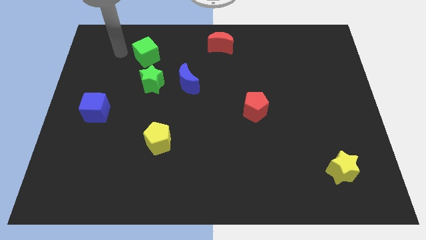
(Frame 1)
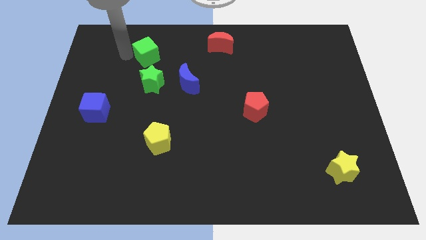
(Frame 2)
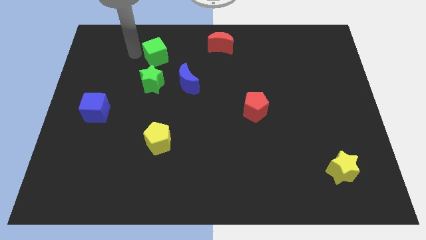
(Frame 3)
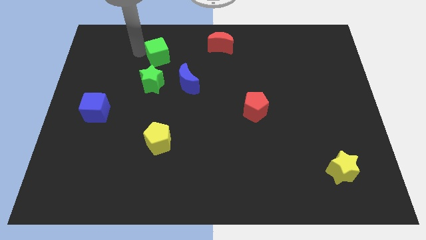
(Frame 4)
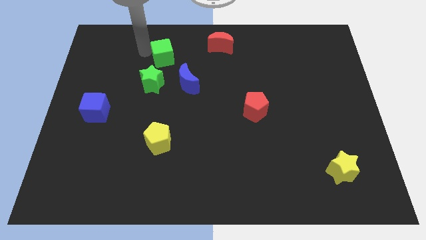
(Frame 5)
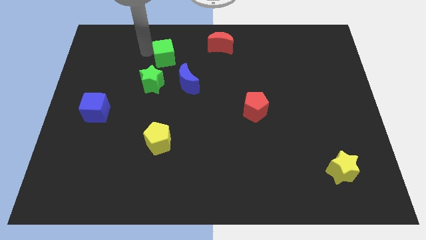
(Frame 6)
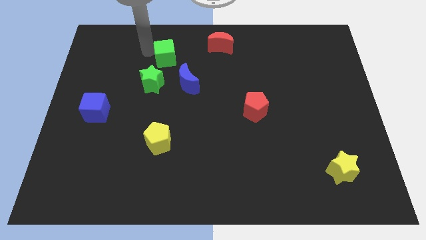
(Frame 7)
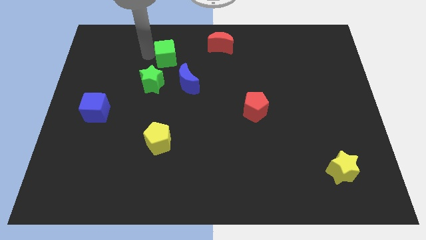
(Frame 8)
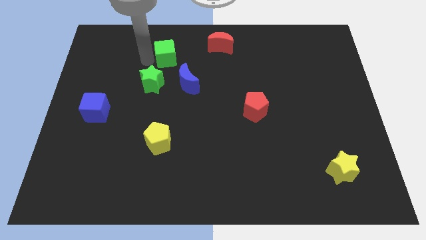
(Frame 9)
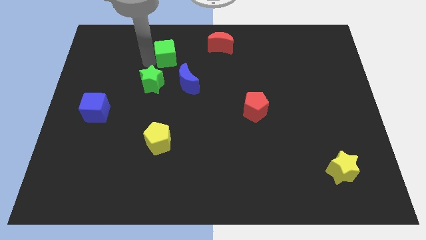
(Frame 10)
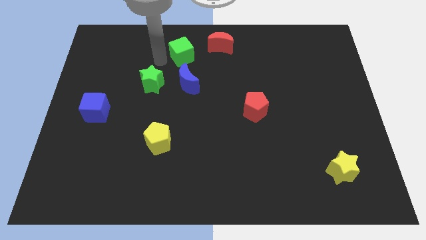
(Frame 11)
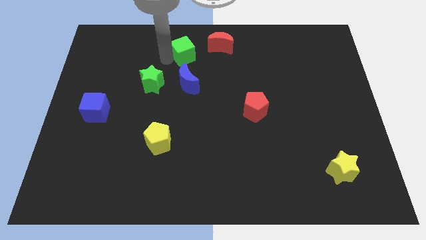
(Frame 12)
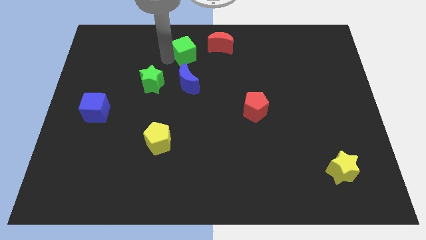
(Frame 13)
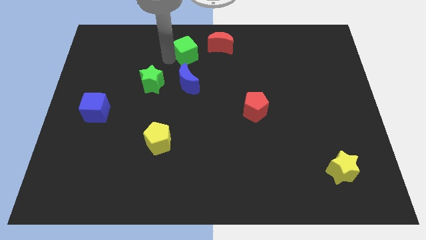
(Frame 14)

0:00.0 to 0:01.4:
push the green cube to the top of blue crescent

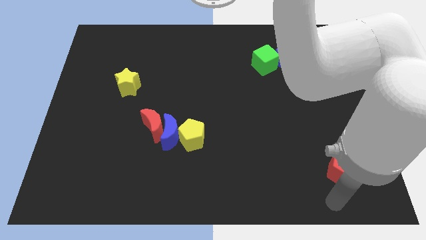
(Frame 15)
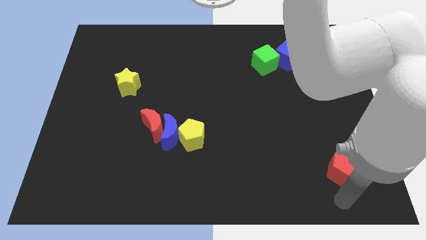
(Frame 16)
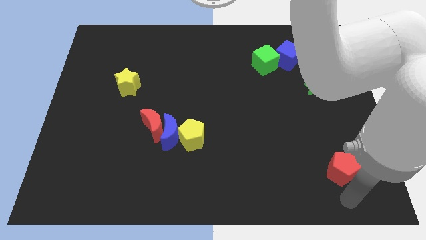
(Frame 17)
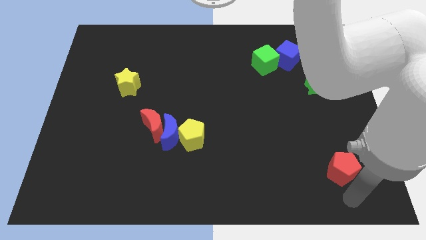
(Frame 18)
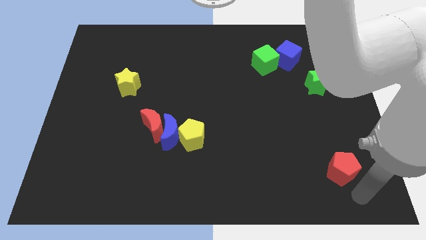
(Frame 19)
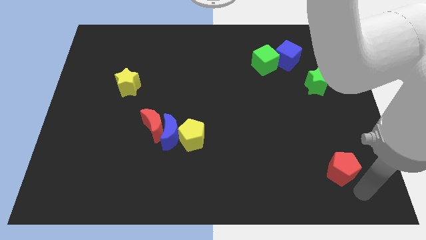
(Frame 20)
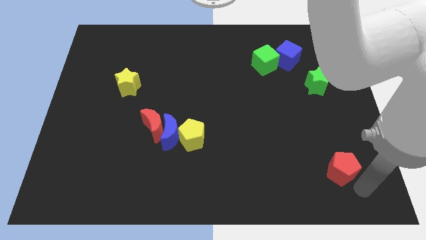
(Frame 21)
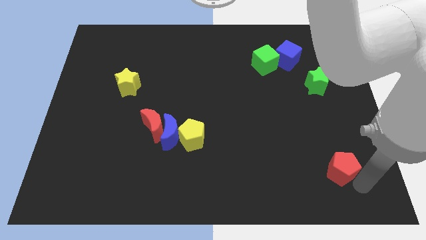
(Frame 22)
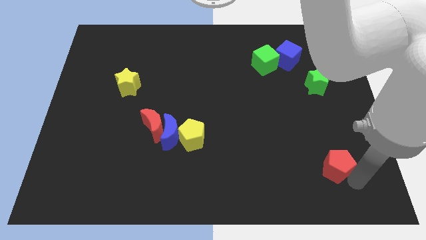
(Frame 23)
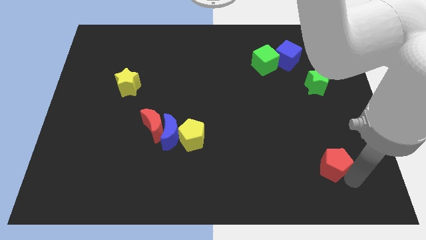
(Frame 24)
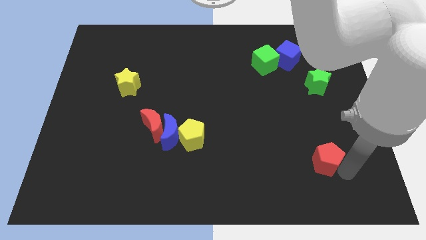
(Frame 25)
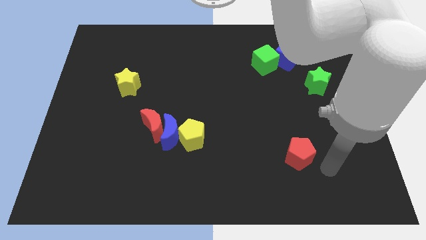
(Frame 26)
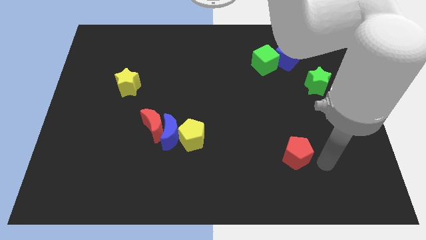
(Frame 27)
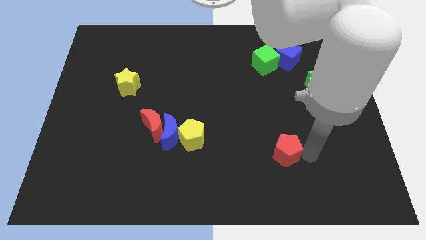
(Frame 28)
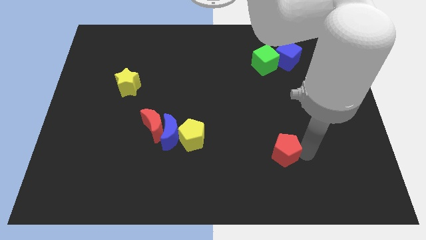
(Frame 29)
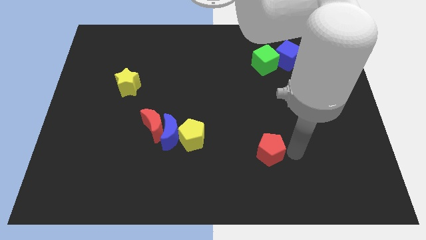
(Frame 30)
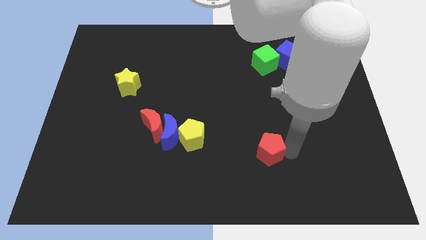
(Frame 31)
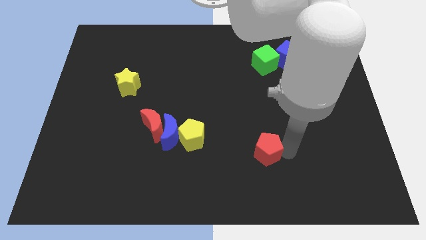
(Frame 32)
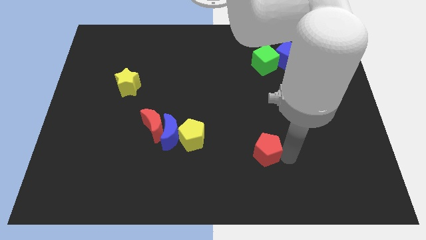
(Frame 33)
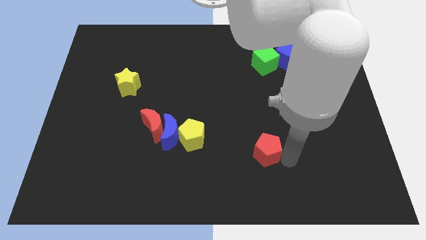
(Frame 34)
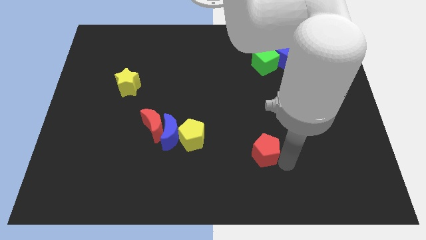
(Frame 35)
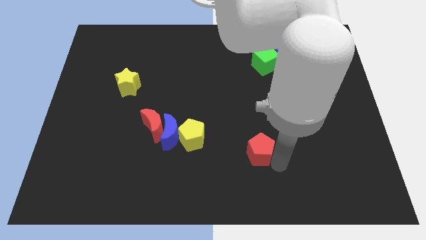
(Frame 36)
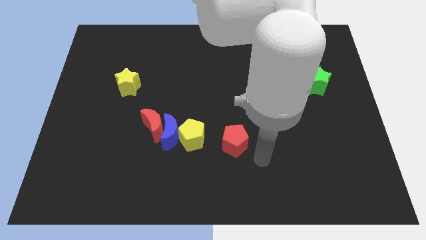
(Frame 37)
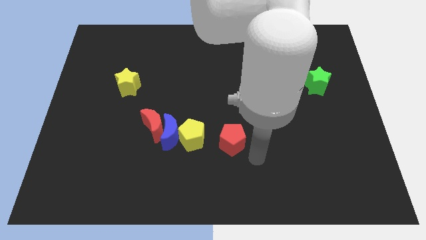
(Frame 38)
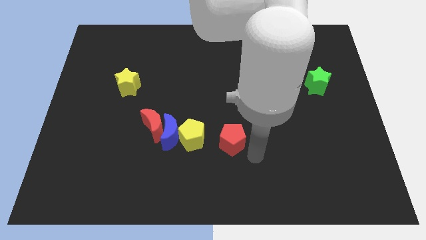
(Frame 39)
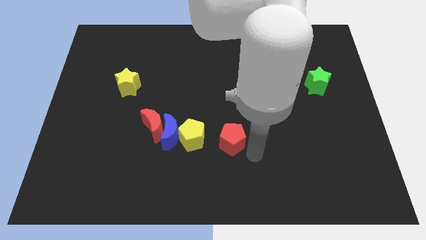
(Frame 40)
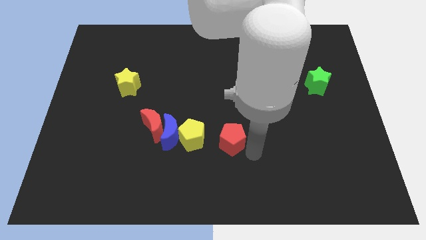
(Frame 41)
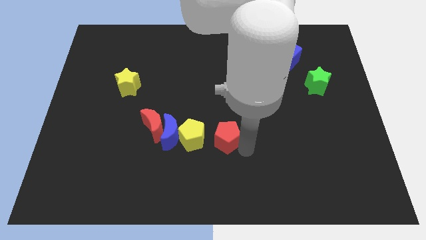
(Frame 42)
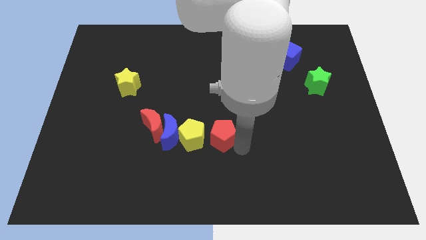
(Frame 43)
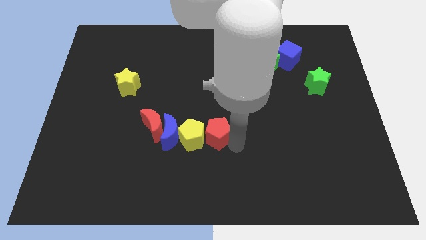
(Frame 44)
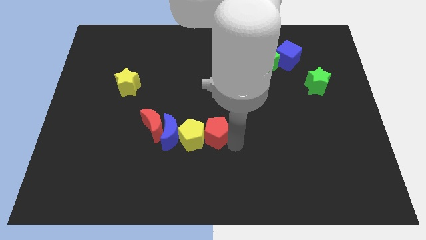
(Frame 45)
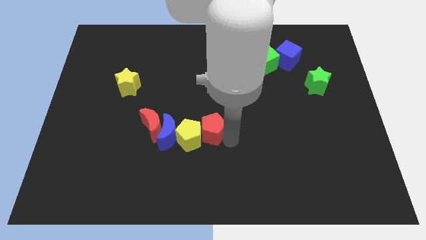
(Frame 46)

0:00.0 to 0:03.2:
place the red pentagon right to the yellow pentagon

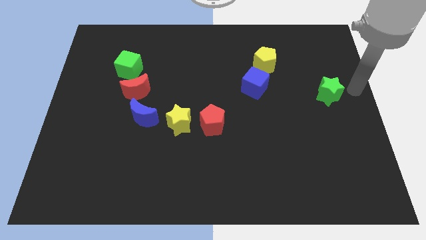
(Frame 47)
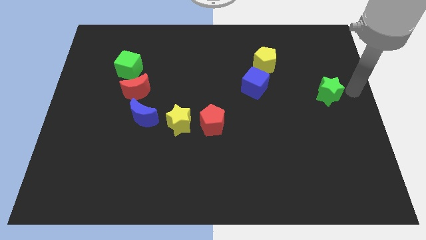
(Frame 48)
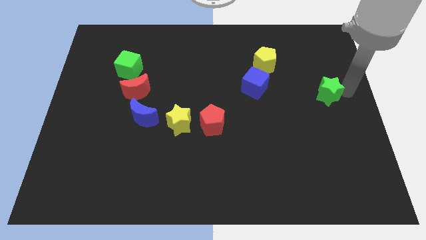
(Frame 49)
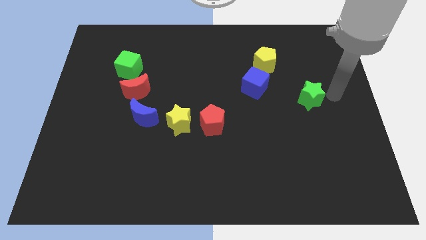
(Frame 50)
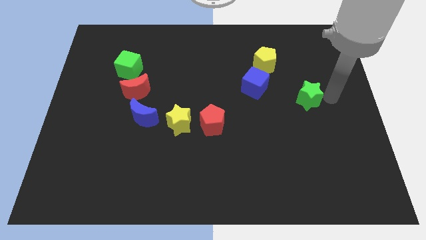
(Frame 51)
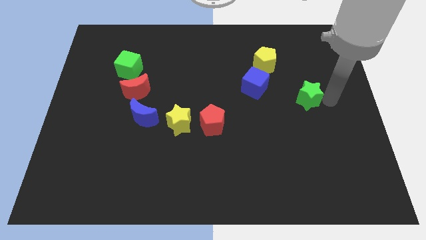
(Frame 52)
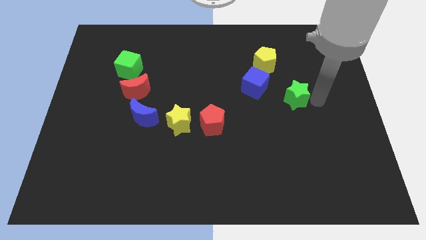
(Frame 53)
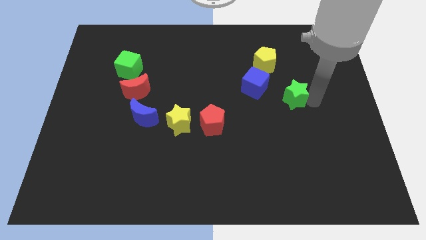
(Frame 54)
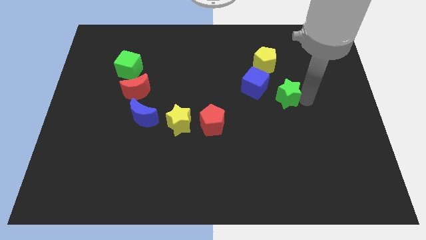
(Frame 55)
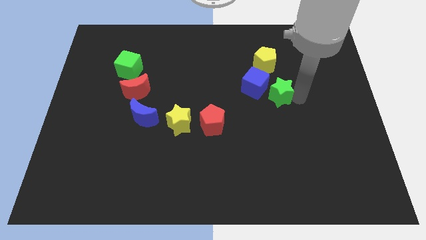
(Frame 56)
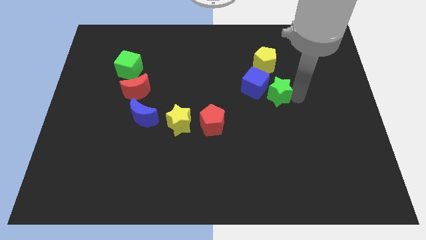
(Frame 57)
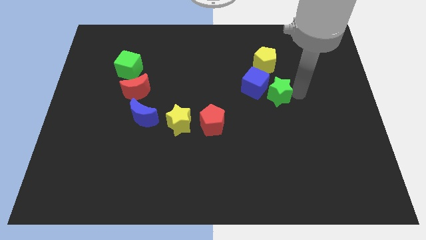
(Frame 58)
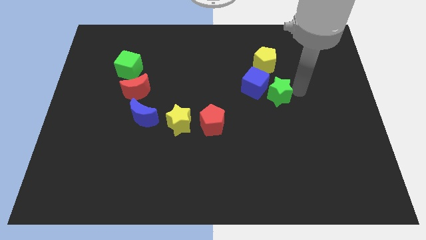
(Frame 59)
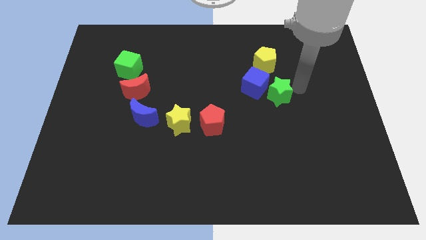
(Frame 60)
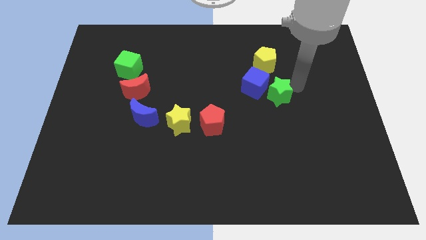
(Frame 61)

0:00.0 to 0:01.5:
push the green star to the right of the blue cube

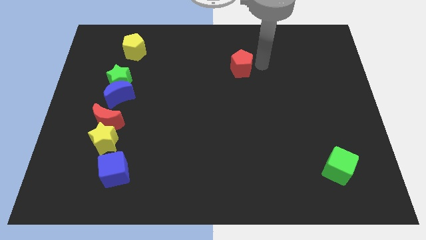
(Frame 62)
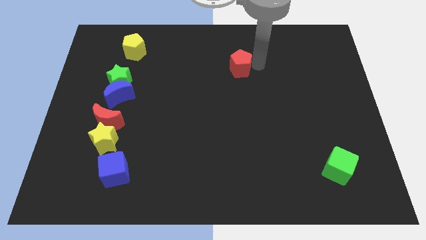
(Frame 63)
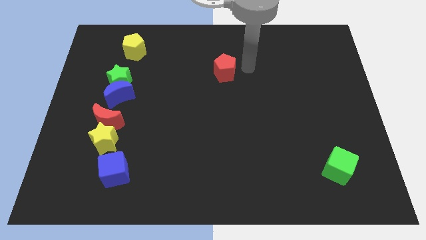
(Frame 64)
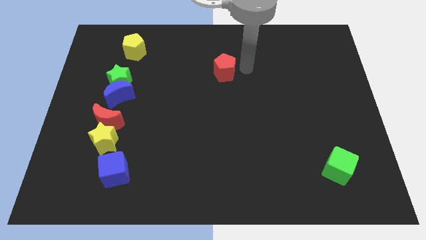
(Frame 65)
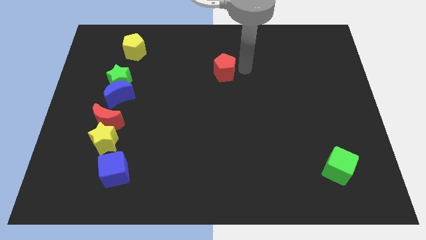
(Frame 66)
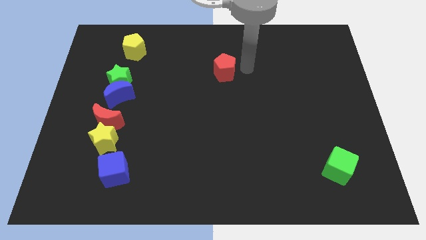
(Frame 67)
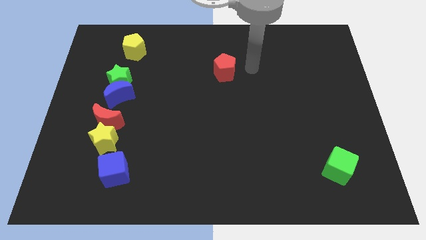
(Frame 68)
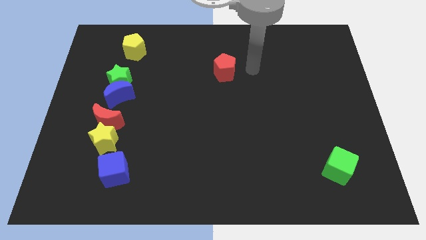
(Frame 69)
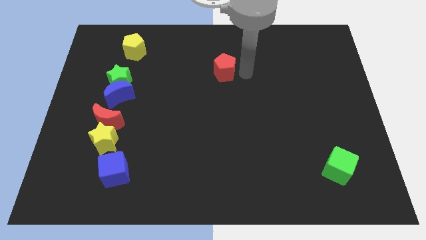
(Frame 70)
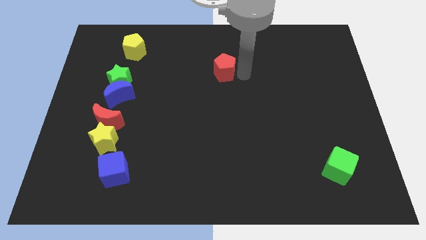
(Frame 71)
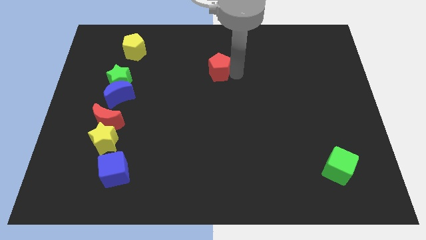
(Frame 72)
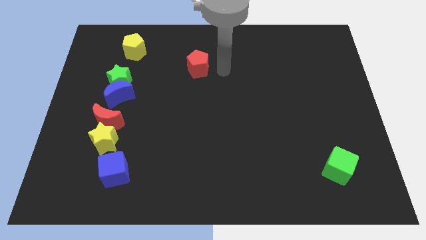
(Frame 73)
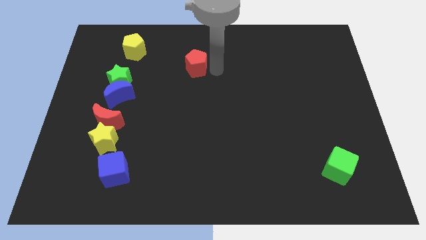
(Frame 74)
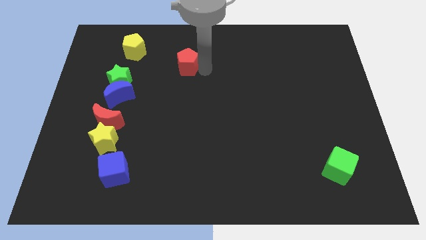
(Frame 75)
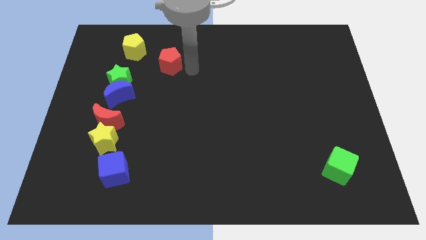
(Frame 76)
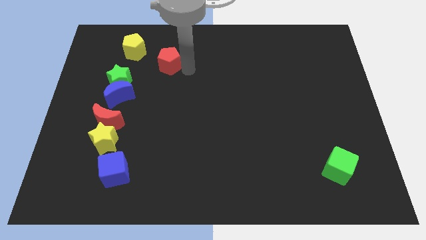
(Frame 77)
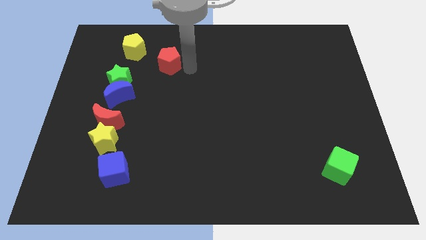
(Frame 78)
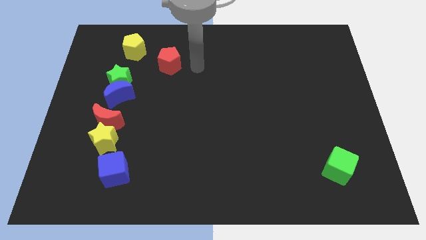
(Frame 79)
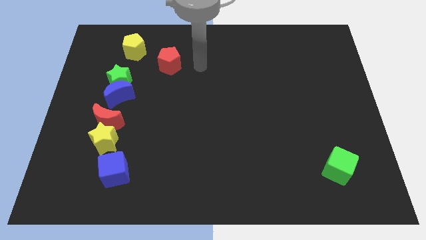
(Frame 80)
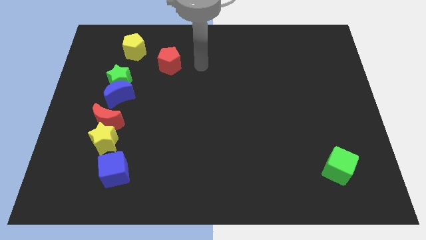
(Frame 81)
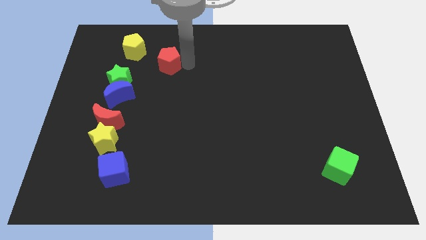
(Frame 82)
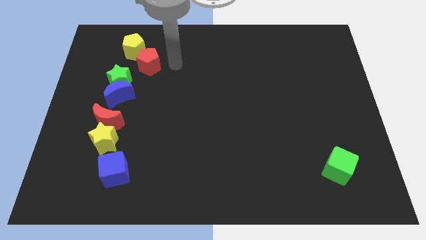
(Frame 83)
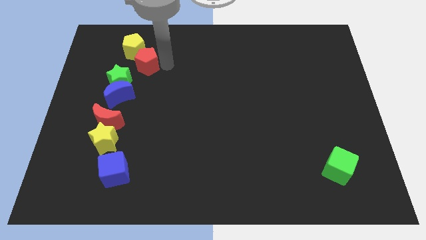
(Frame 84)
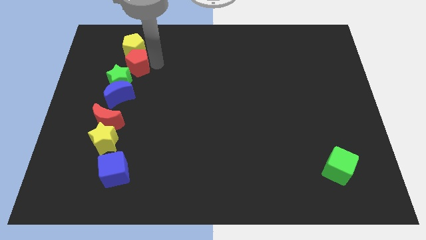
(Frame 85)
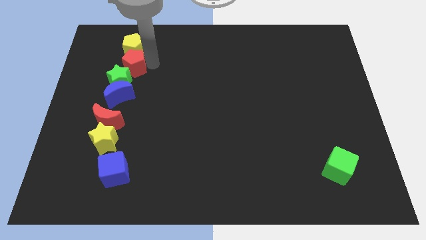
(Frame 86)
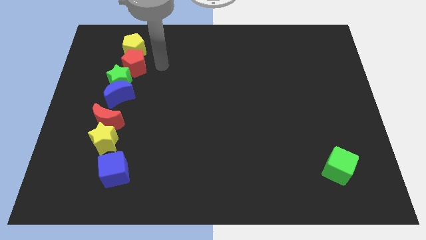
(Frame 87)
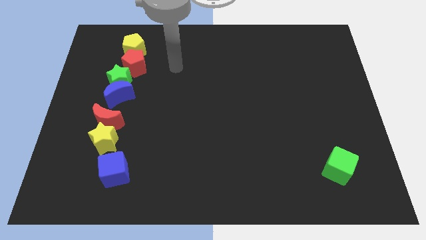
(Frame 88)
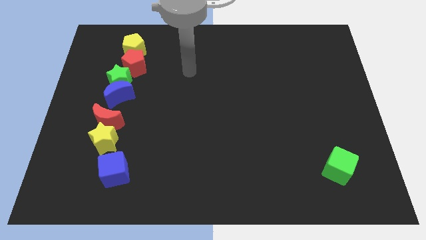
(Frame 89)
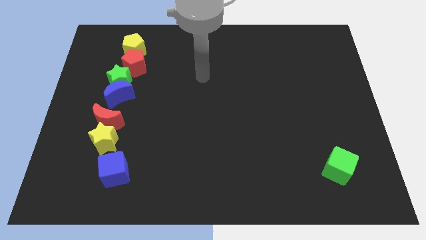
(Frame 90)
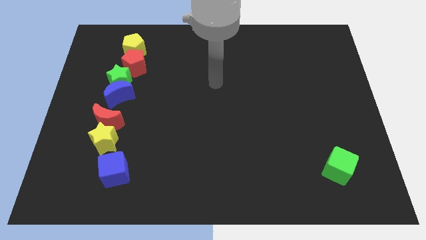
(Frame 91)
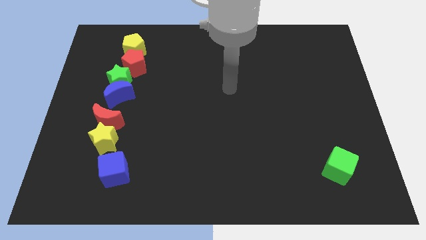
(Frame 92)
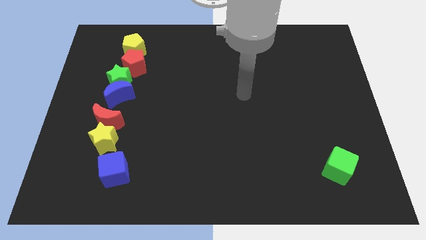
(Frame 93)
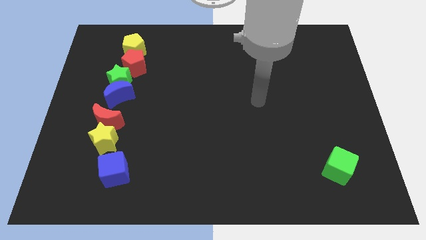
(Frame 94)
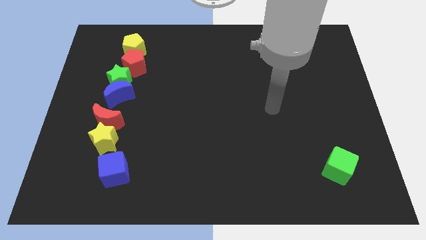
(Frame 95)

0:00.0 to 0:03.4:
move the red pentagon above the green star
